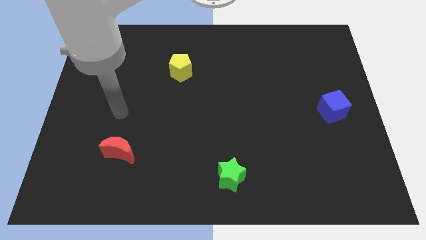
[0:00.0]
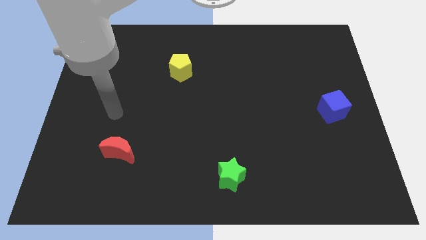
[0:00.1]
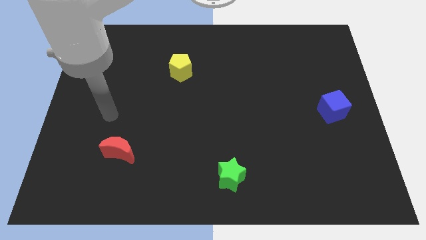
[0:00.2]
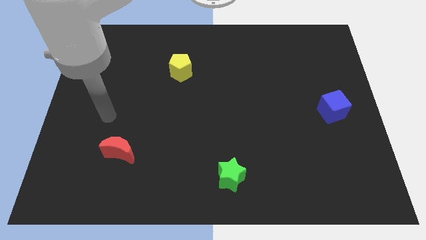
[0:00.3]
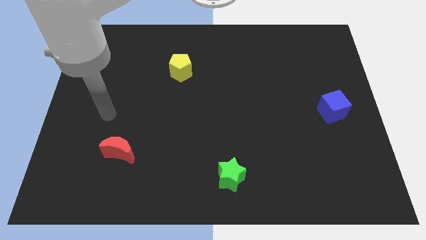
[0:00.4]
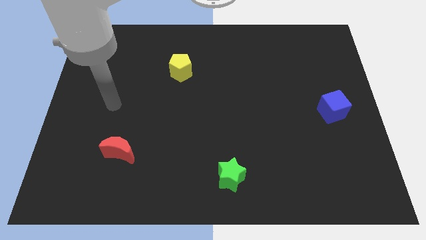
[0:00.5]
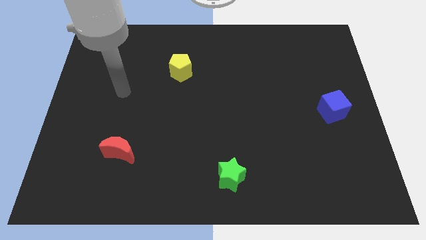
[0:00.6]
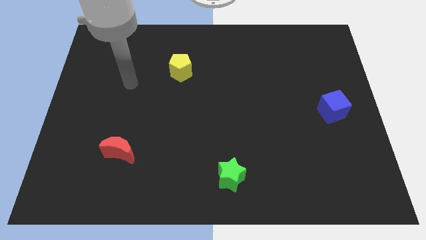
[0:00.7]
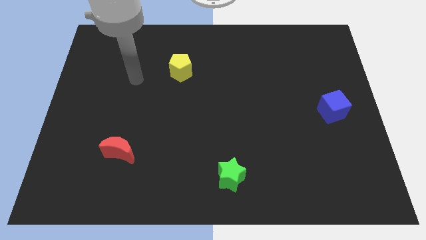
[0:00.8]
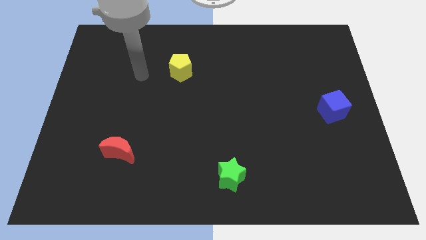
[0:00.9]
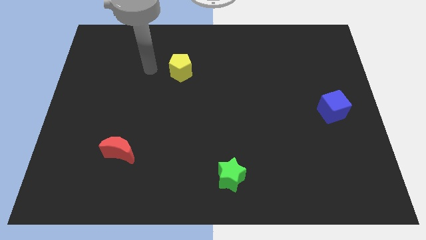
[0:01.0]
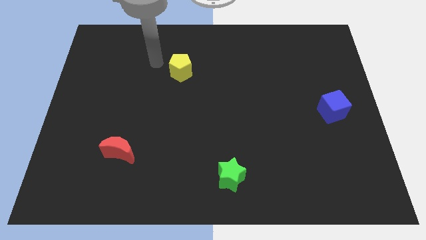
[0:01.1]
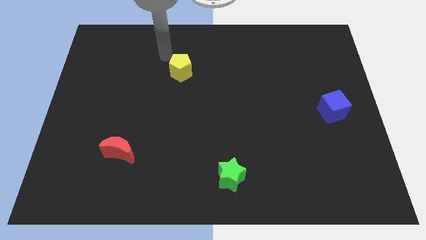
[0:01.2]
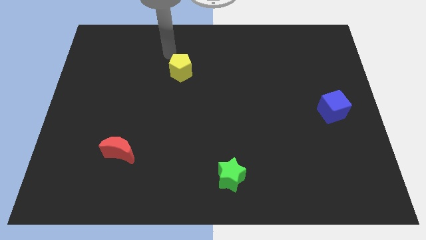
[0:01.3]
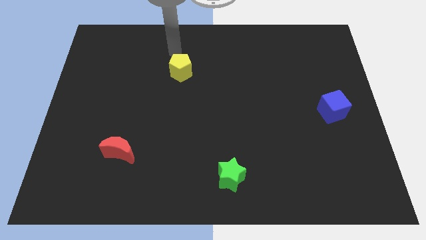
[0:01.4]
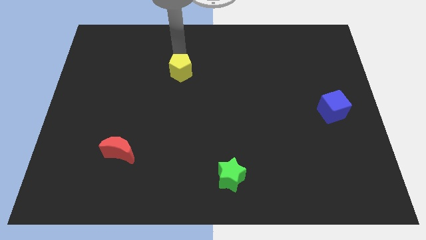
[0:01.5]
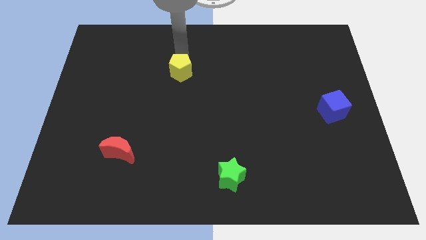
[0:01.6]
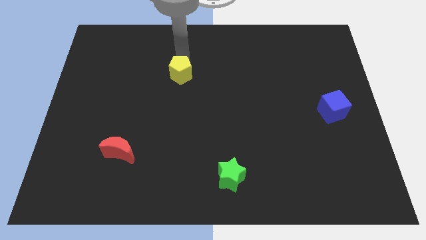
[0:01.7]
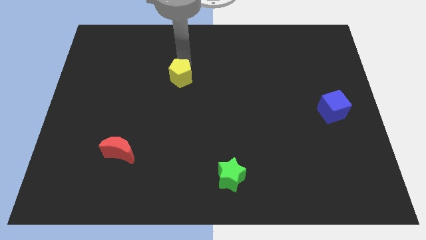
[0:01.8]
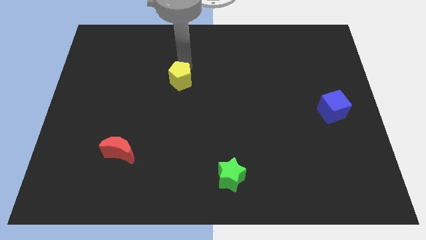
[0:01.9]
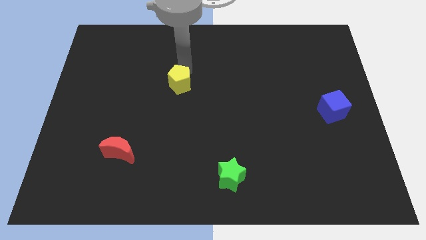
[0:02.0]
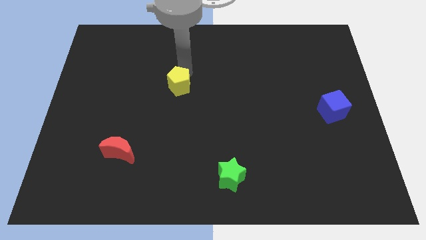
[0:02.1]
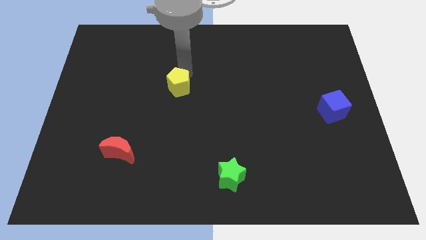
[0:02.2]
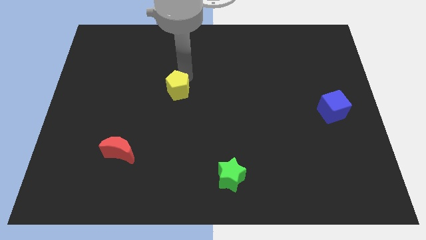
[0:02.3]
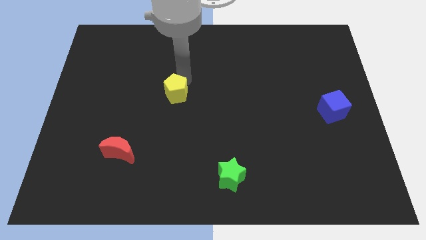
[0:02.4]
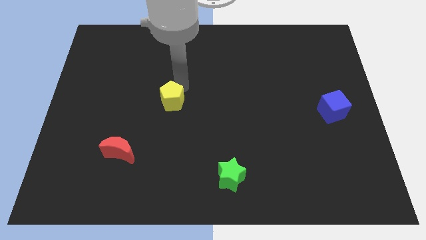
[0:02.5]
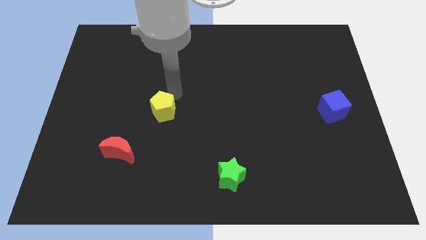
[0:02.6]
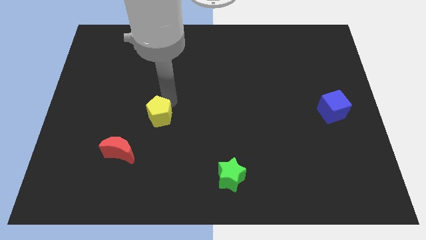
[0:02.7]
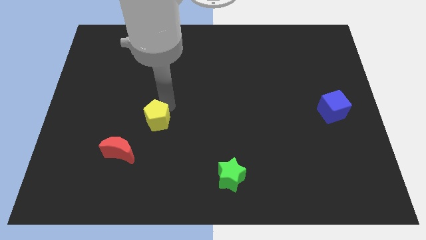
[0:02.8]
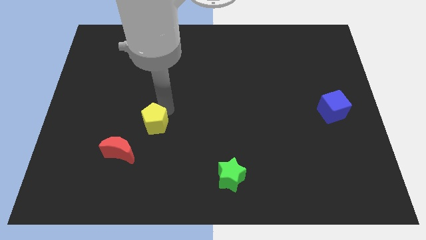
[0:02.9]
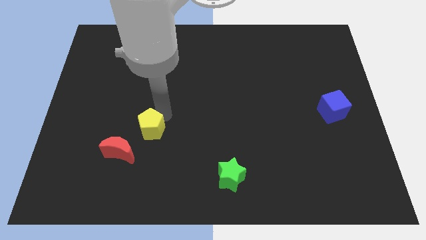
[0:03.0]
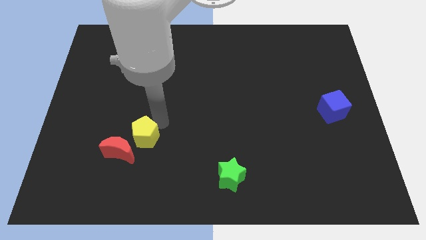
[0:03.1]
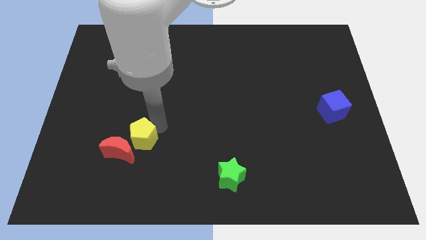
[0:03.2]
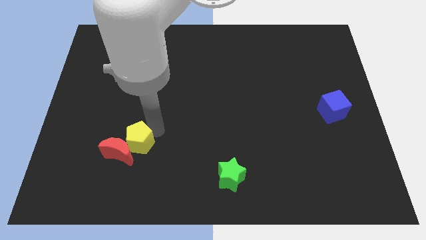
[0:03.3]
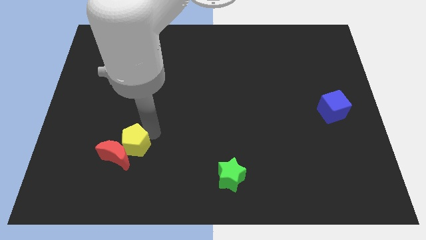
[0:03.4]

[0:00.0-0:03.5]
put the yellow pentagon to the red block

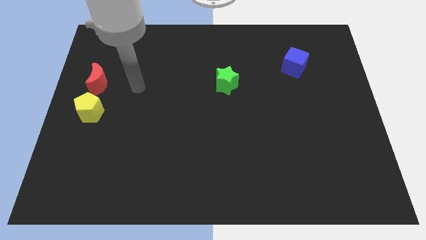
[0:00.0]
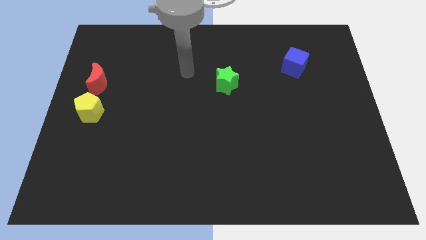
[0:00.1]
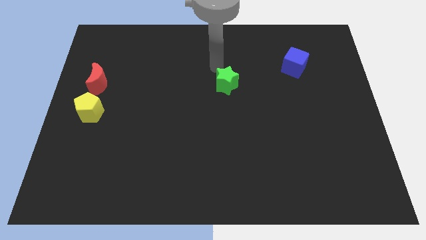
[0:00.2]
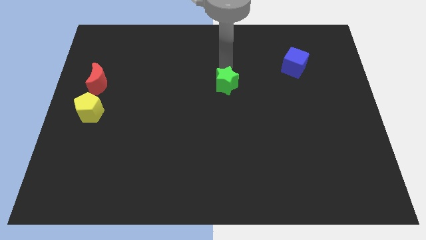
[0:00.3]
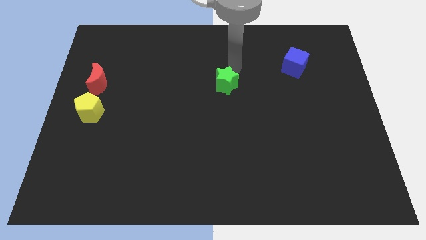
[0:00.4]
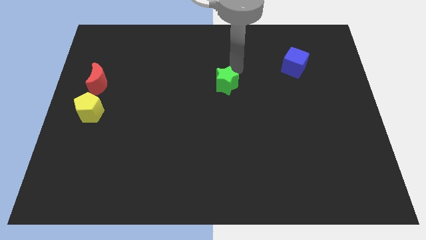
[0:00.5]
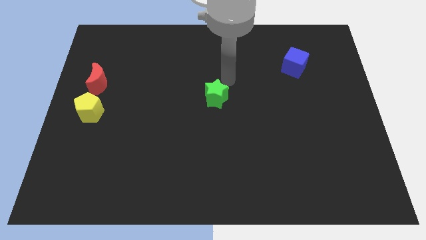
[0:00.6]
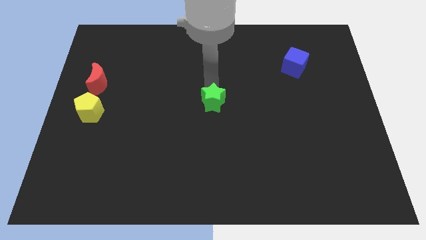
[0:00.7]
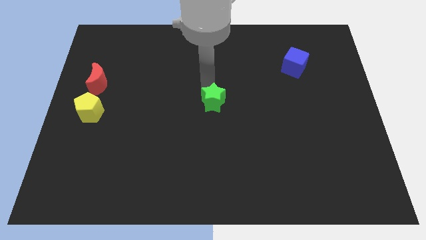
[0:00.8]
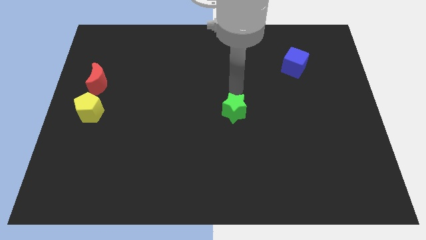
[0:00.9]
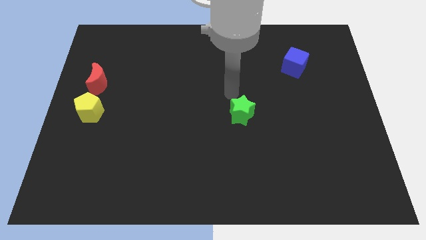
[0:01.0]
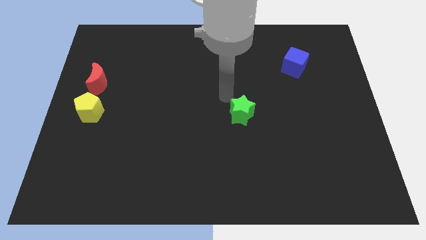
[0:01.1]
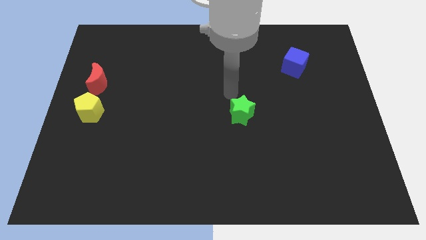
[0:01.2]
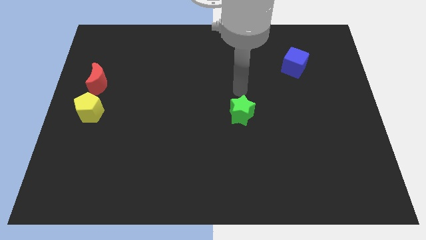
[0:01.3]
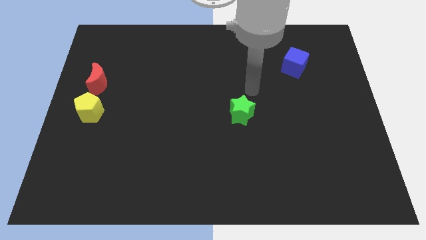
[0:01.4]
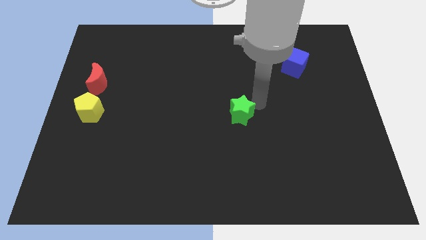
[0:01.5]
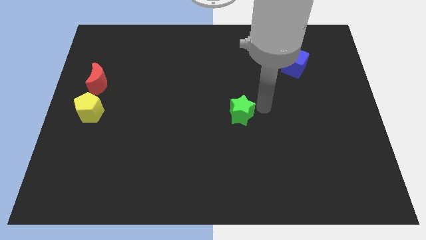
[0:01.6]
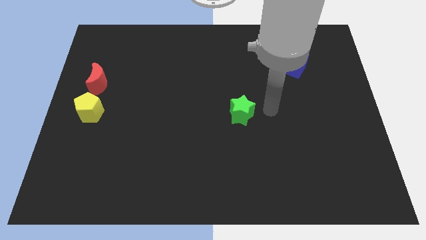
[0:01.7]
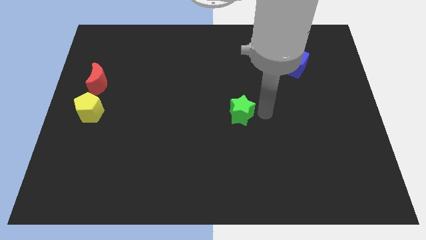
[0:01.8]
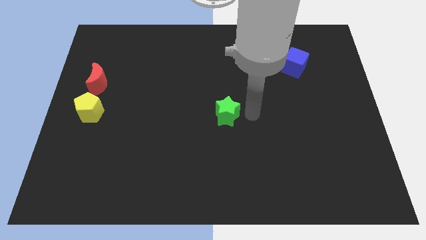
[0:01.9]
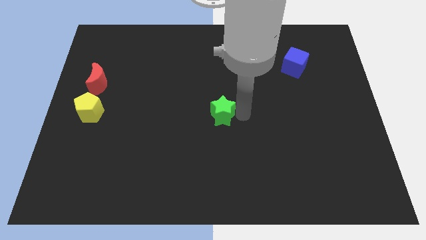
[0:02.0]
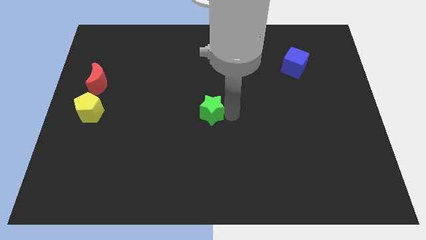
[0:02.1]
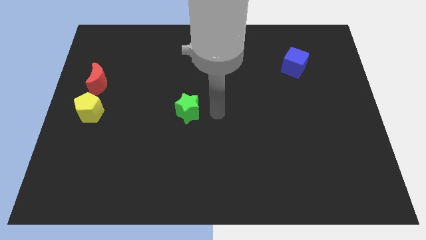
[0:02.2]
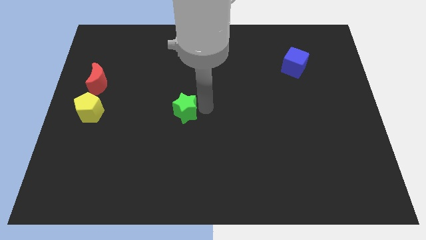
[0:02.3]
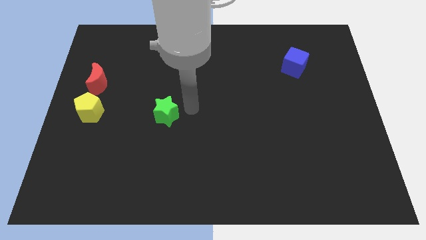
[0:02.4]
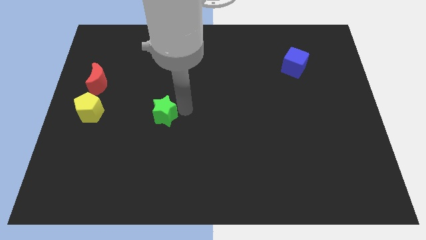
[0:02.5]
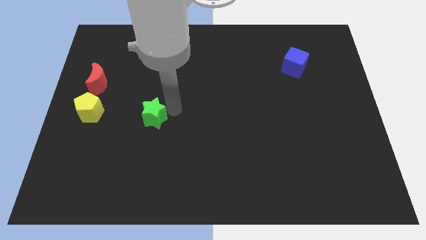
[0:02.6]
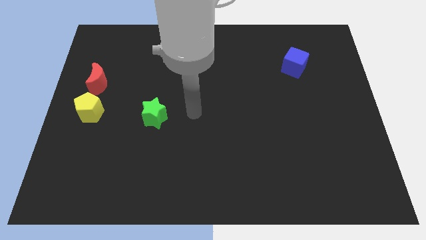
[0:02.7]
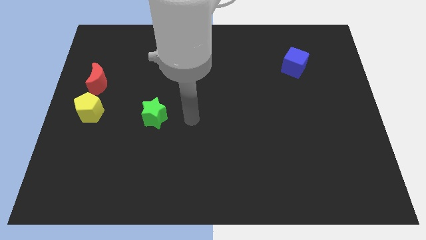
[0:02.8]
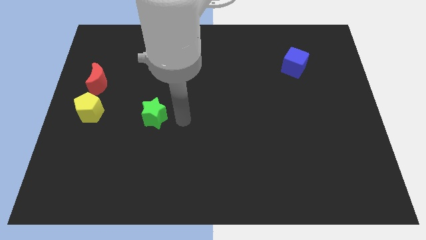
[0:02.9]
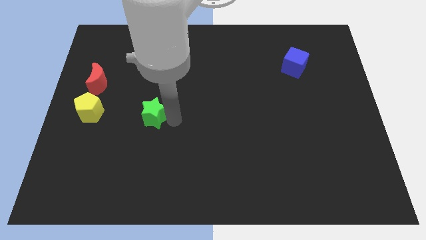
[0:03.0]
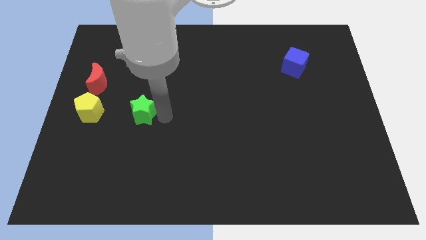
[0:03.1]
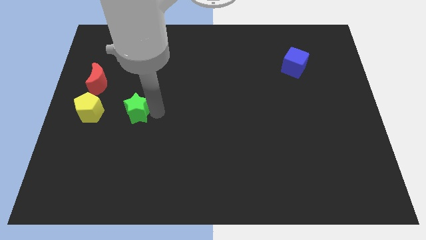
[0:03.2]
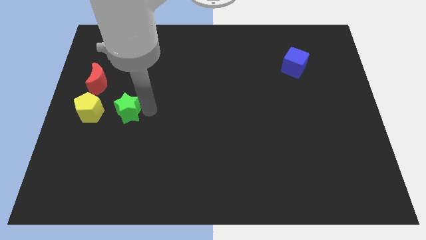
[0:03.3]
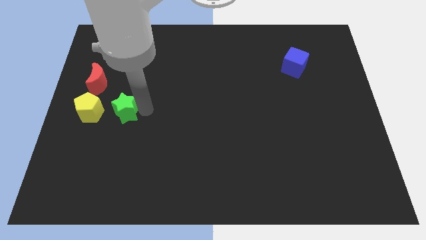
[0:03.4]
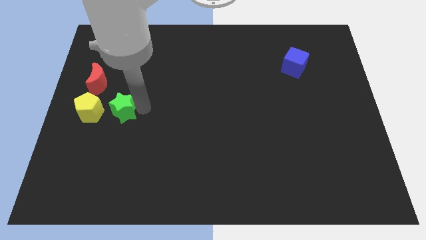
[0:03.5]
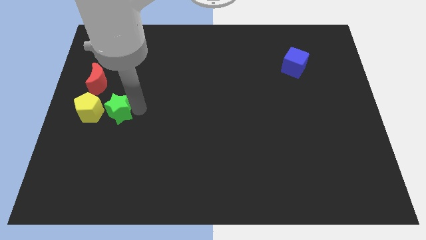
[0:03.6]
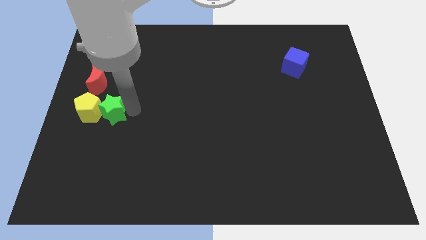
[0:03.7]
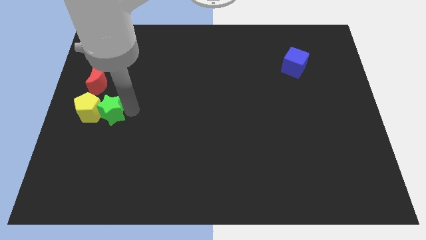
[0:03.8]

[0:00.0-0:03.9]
put the star towards the pentagon

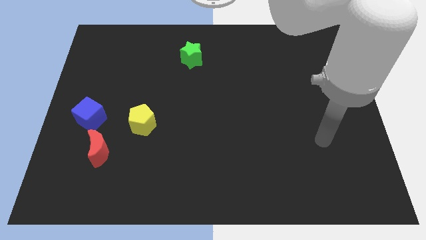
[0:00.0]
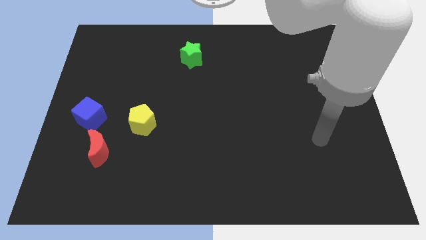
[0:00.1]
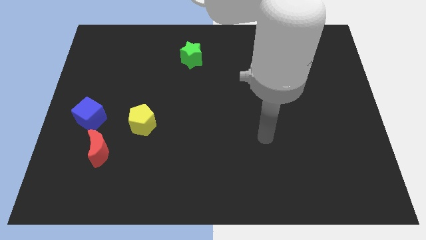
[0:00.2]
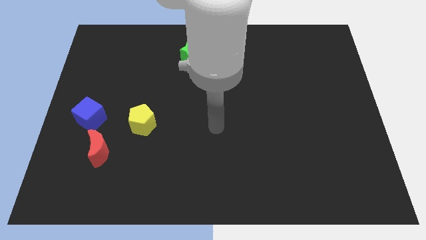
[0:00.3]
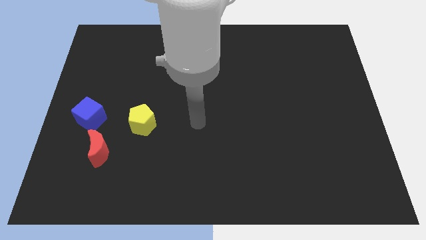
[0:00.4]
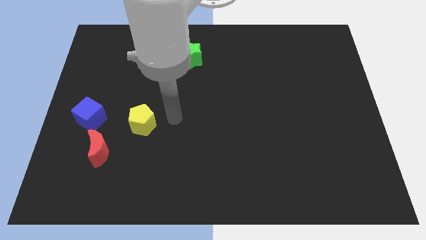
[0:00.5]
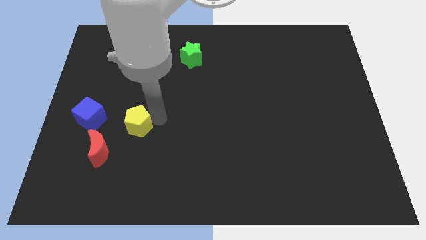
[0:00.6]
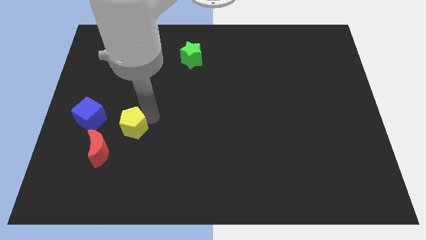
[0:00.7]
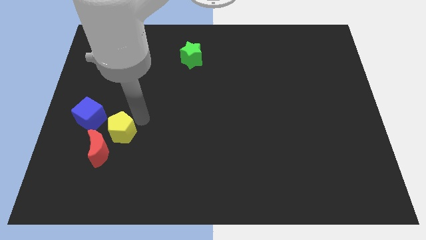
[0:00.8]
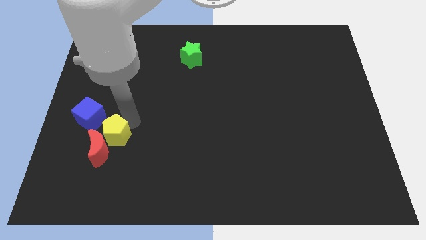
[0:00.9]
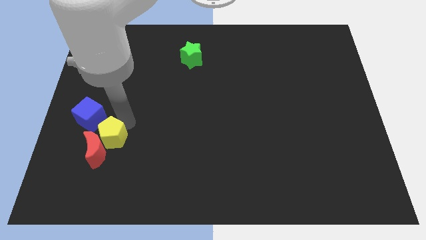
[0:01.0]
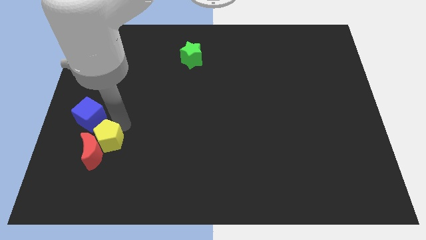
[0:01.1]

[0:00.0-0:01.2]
put the yellow block to the red block

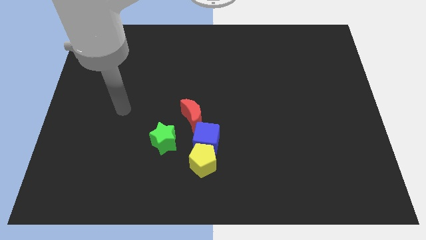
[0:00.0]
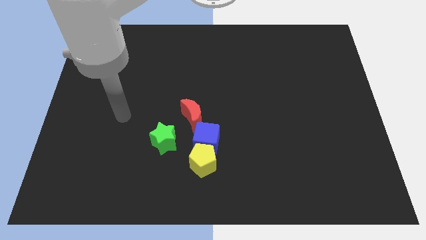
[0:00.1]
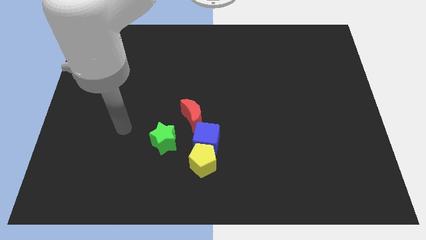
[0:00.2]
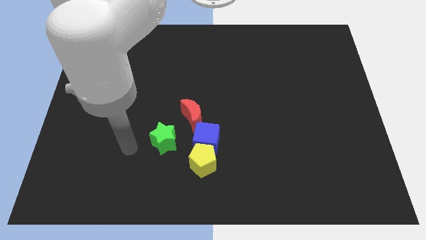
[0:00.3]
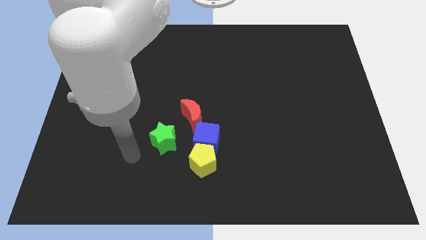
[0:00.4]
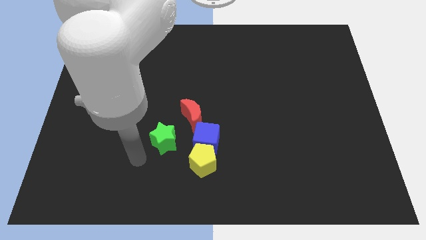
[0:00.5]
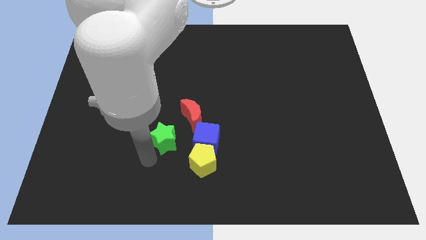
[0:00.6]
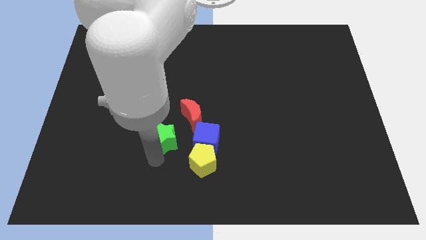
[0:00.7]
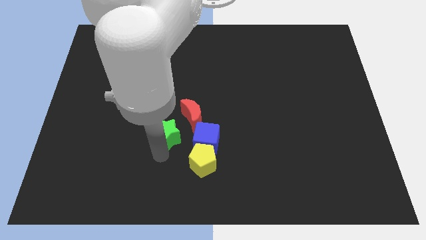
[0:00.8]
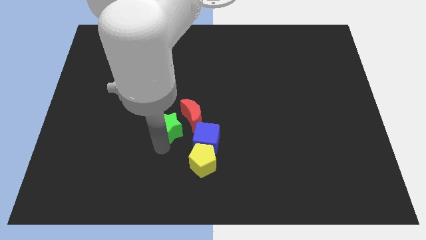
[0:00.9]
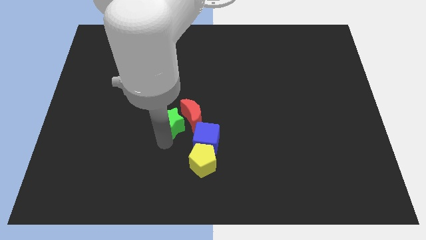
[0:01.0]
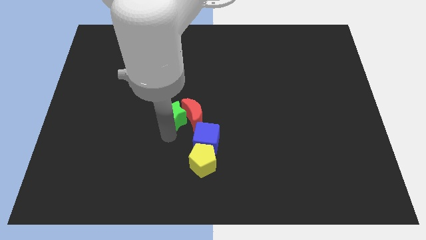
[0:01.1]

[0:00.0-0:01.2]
put the star next to the moon
